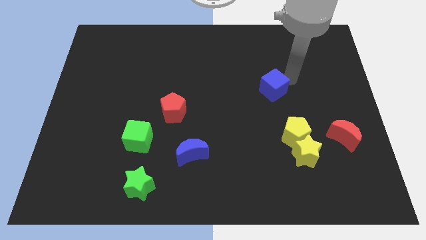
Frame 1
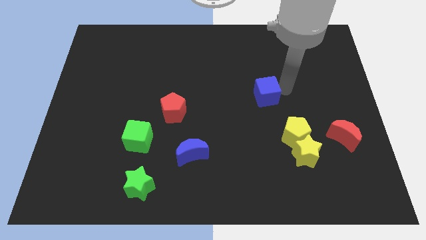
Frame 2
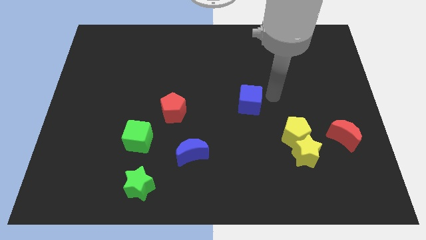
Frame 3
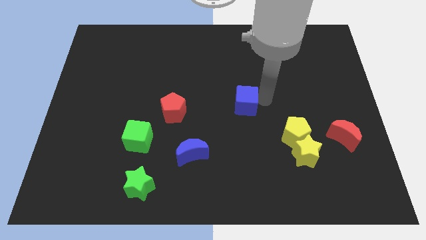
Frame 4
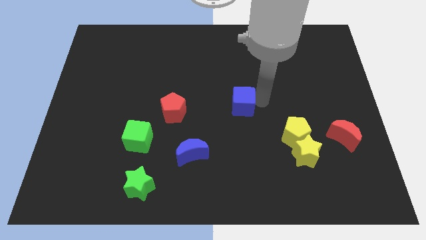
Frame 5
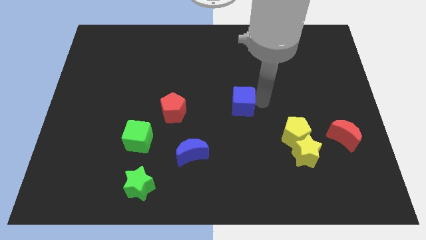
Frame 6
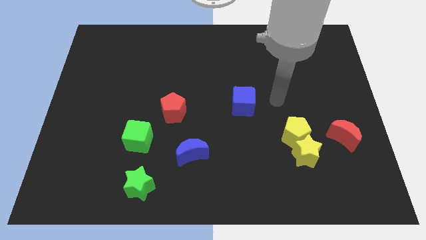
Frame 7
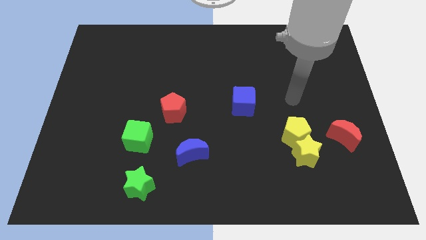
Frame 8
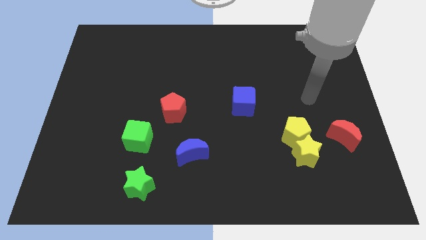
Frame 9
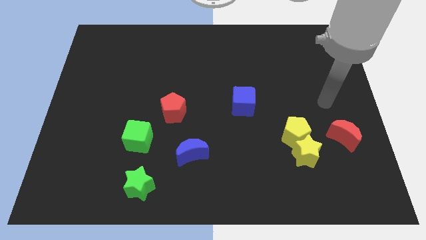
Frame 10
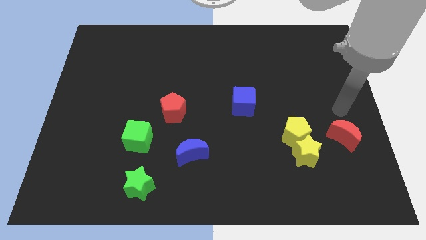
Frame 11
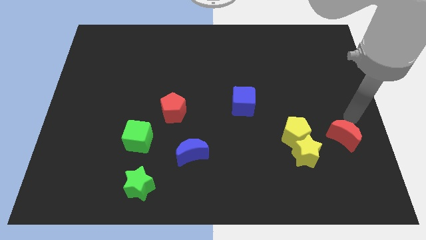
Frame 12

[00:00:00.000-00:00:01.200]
put the blue cube to the right of the red pentagon

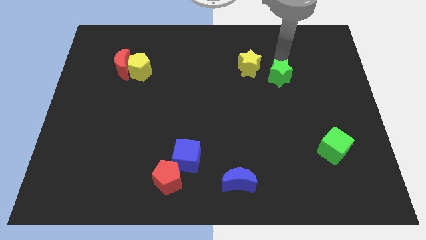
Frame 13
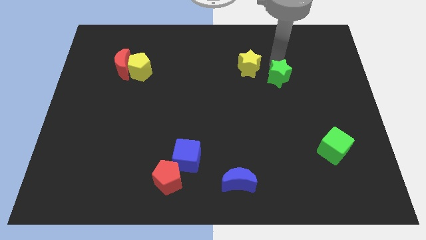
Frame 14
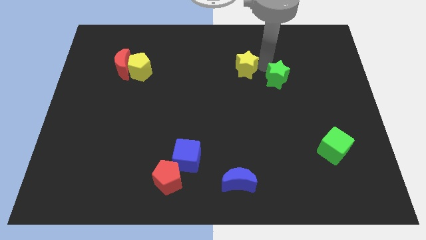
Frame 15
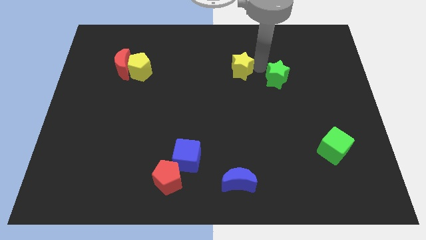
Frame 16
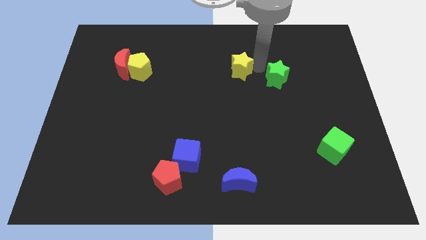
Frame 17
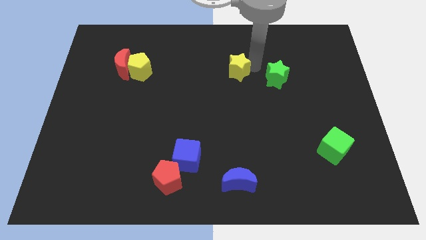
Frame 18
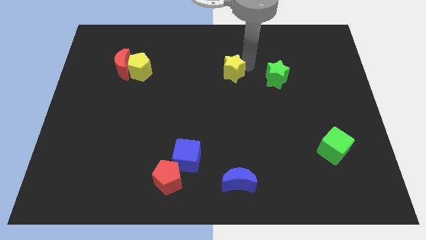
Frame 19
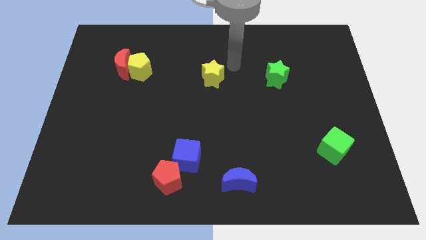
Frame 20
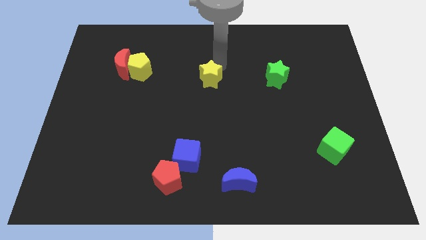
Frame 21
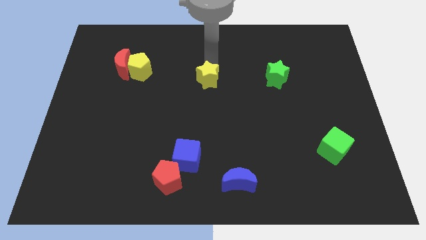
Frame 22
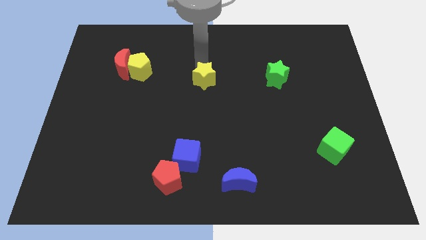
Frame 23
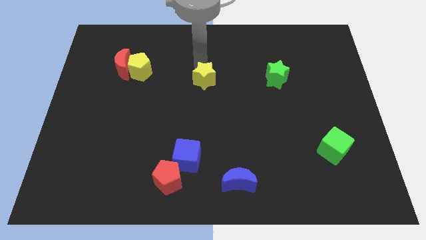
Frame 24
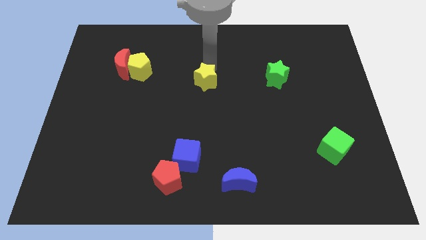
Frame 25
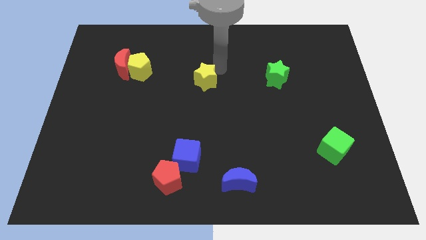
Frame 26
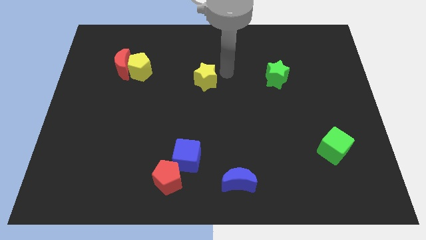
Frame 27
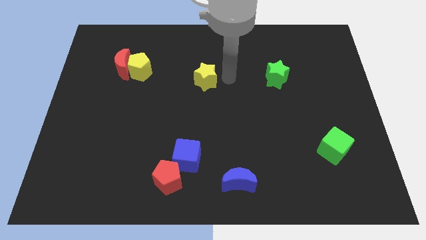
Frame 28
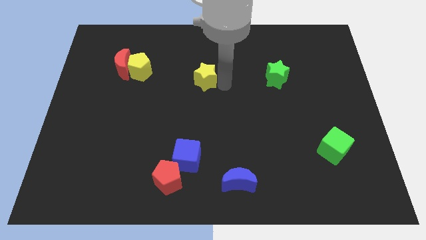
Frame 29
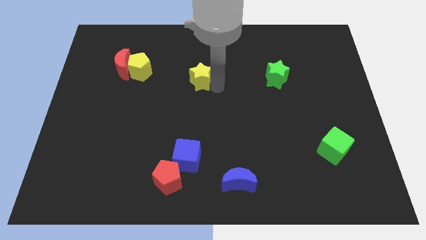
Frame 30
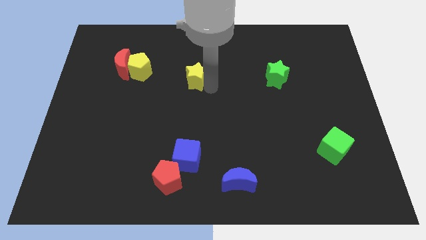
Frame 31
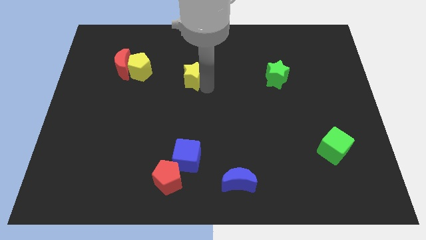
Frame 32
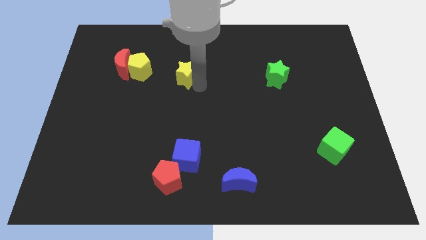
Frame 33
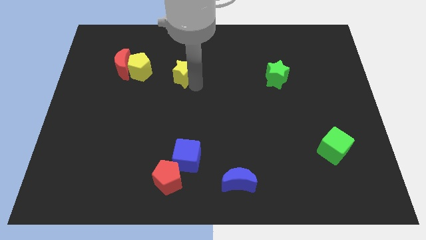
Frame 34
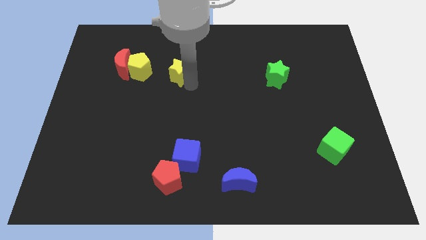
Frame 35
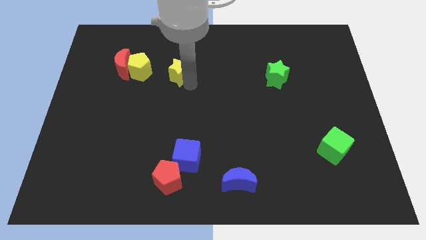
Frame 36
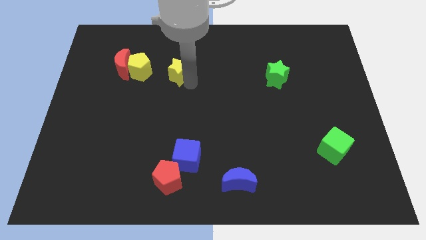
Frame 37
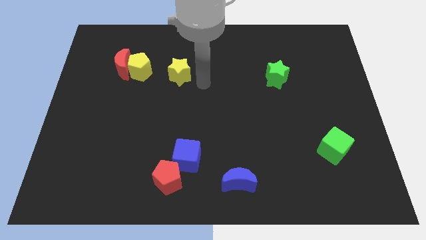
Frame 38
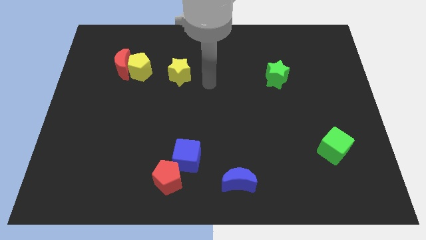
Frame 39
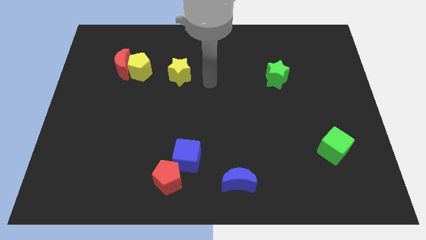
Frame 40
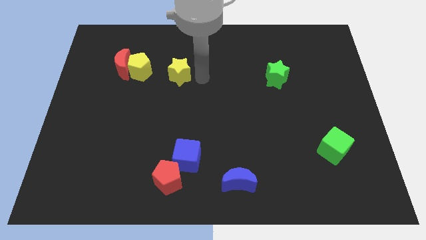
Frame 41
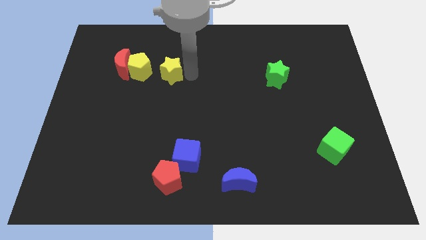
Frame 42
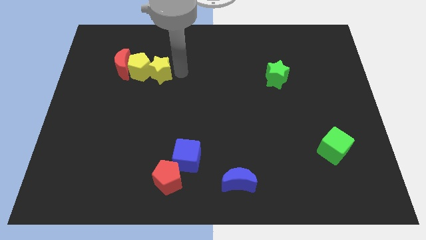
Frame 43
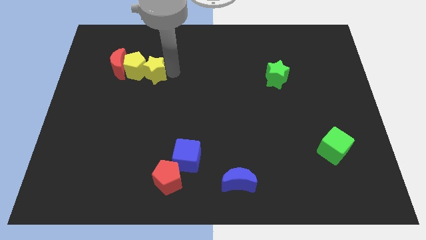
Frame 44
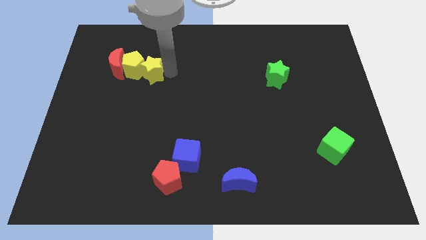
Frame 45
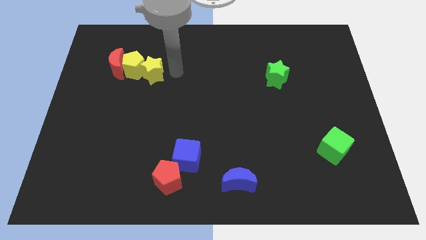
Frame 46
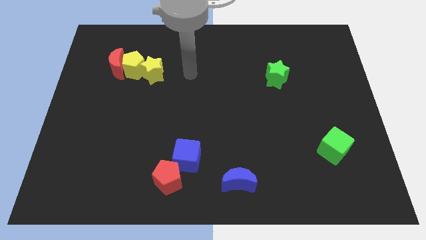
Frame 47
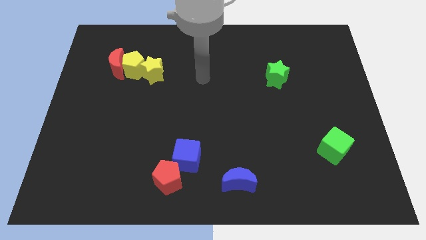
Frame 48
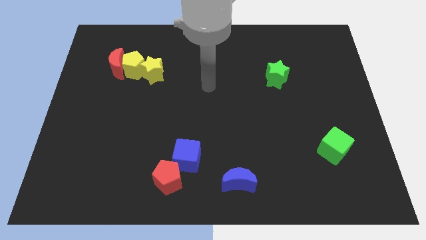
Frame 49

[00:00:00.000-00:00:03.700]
push the yellow star into yellow pentagon

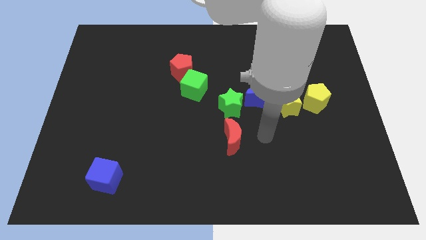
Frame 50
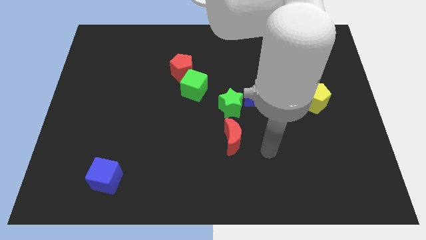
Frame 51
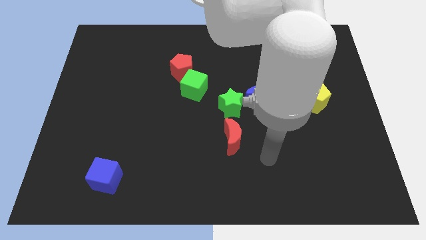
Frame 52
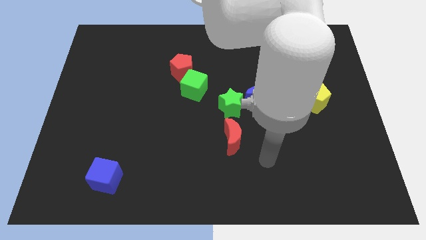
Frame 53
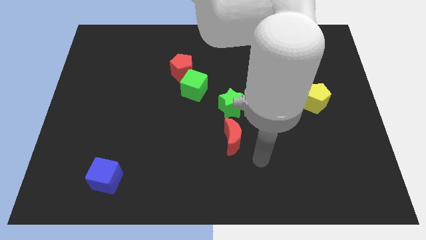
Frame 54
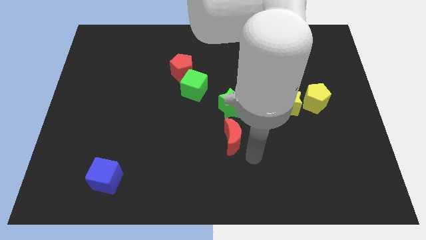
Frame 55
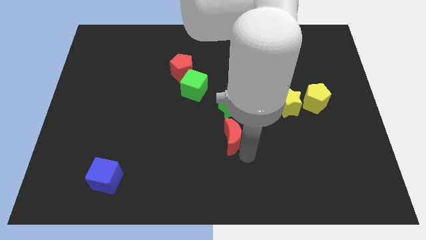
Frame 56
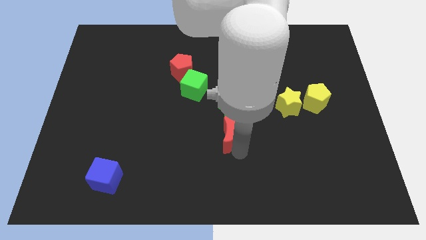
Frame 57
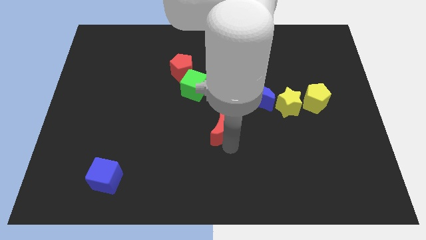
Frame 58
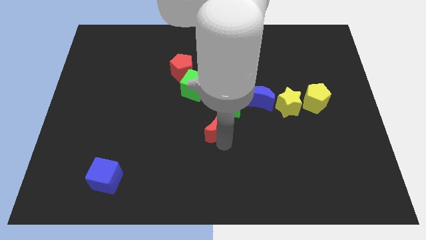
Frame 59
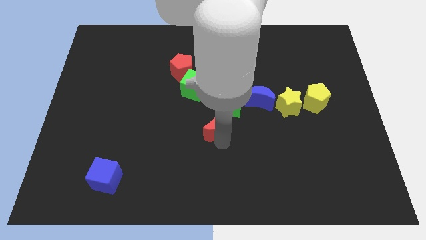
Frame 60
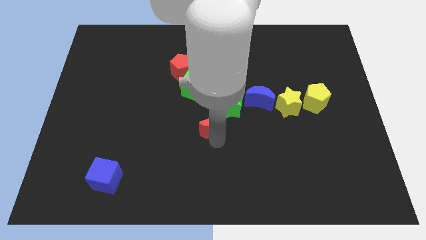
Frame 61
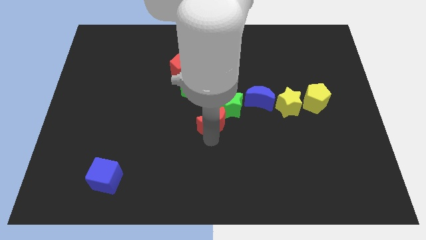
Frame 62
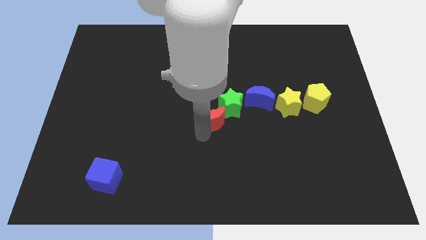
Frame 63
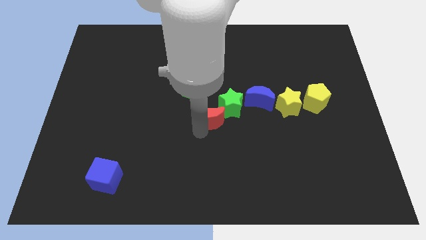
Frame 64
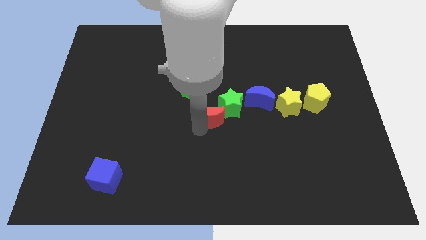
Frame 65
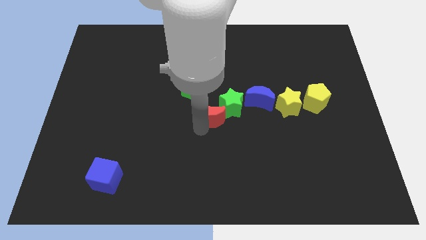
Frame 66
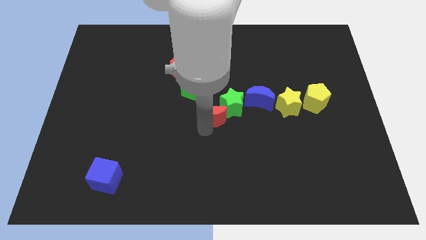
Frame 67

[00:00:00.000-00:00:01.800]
place the red moon diagonal to the green cube

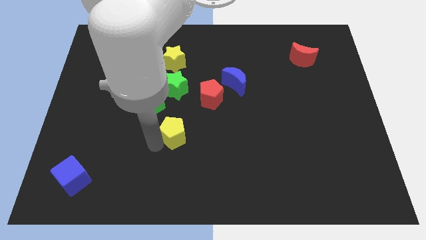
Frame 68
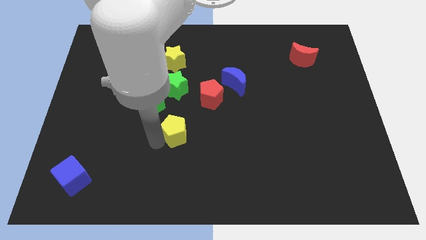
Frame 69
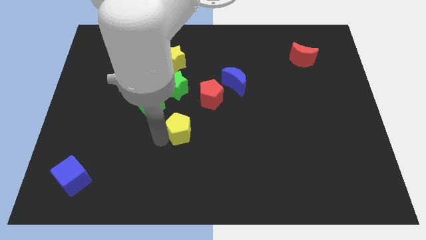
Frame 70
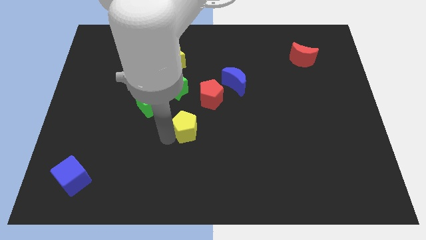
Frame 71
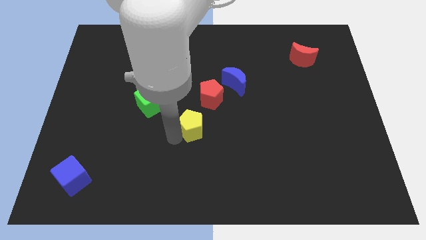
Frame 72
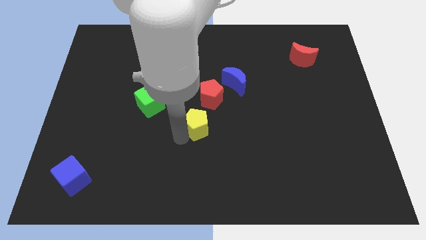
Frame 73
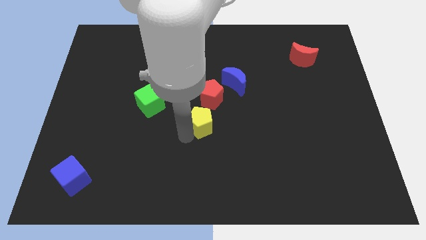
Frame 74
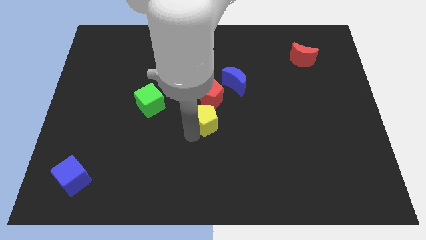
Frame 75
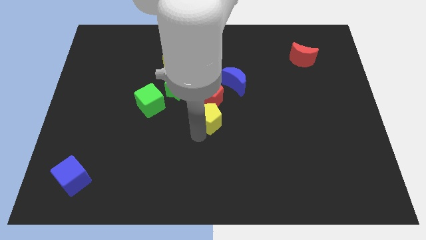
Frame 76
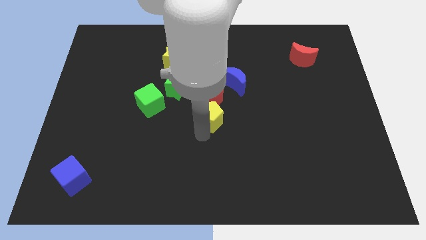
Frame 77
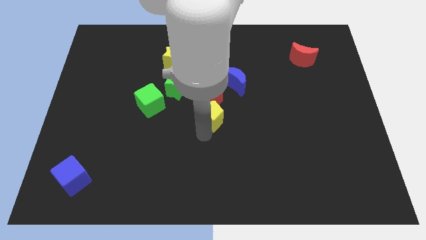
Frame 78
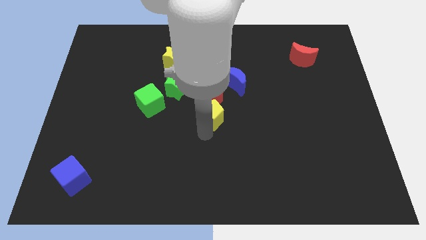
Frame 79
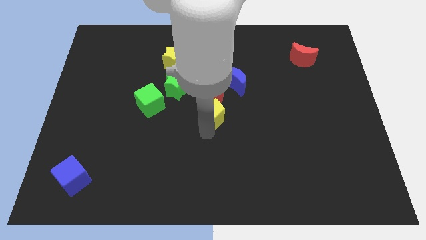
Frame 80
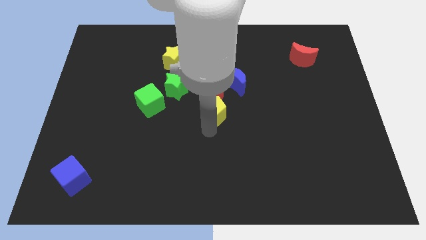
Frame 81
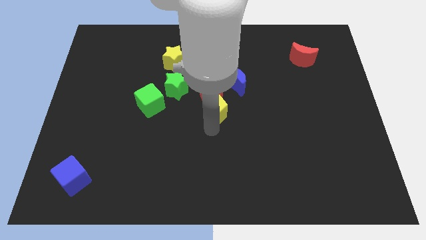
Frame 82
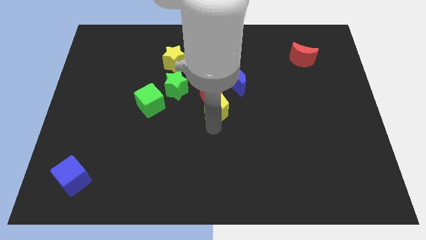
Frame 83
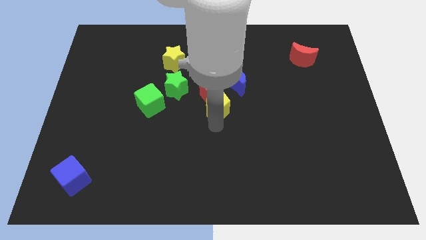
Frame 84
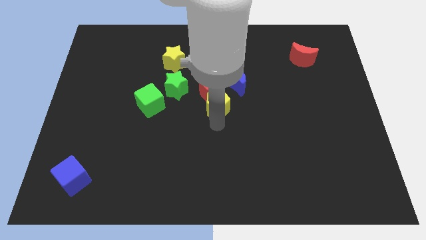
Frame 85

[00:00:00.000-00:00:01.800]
push the yellow pentagon into the red pentagon

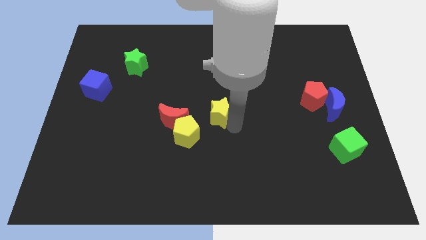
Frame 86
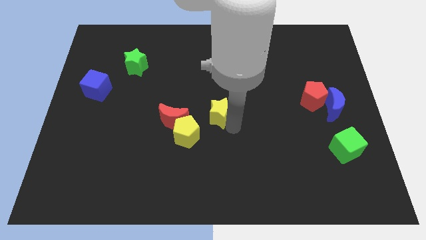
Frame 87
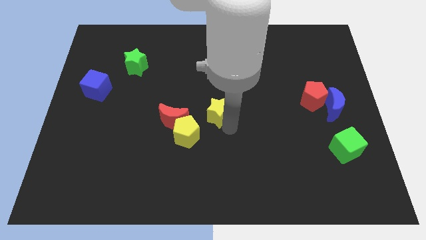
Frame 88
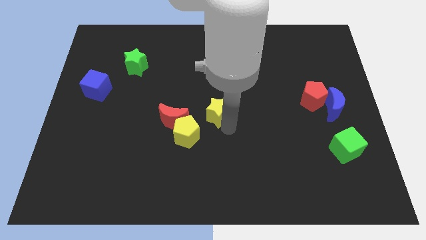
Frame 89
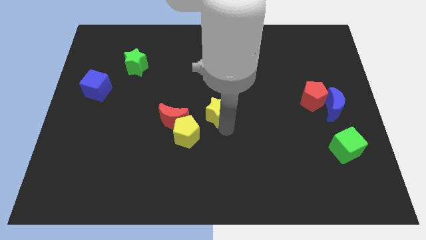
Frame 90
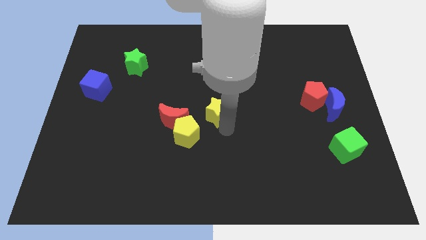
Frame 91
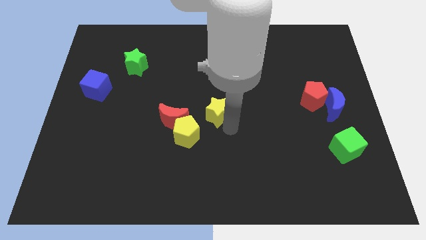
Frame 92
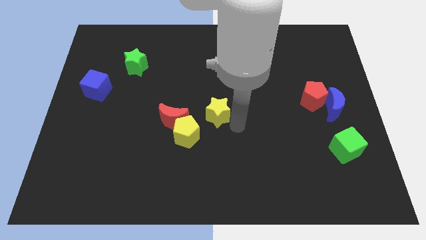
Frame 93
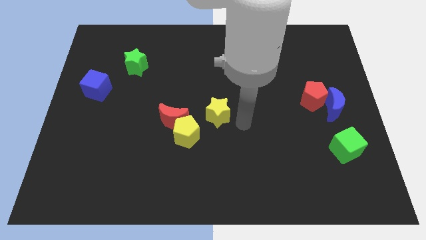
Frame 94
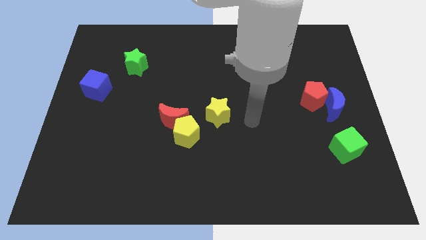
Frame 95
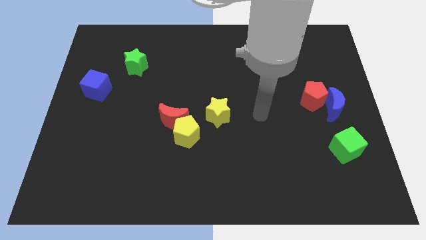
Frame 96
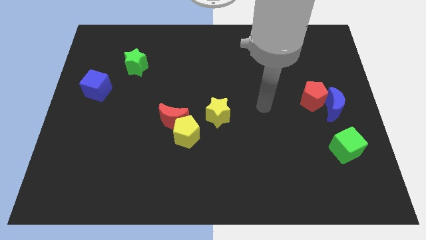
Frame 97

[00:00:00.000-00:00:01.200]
move the yellow star slightly to the left
